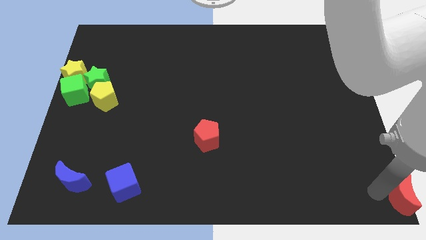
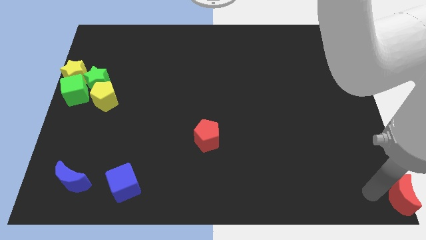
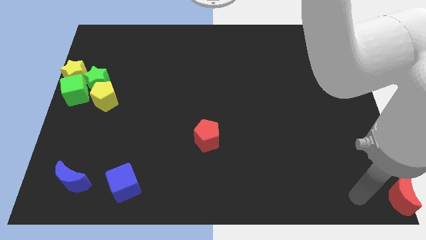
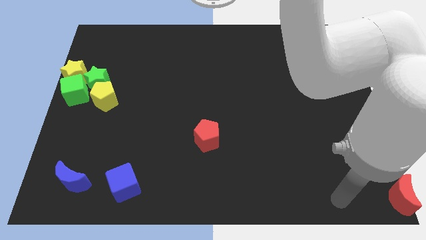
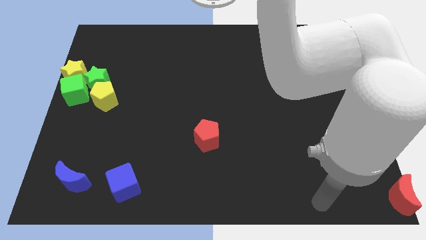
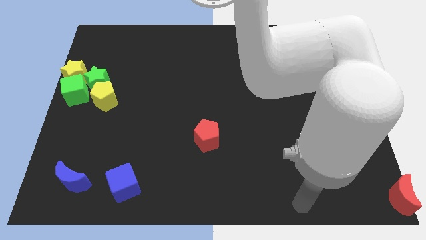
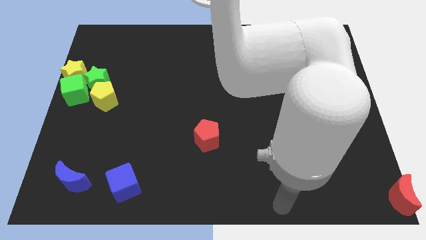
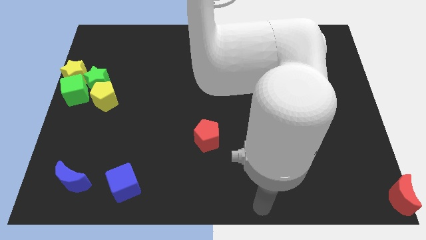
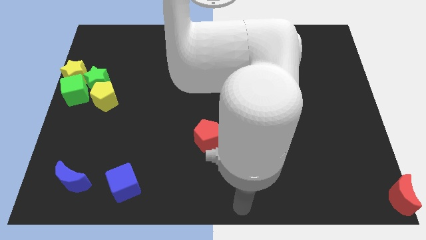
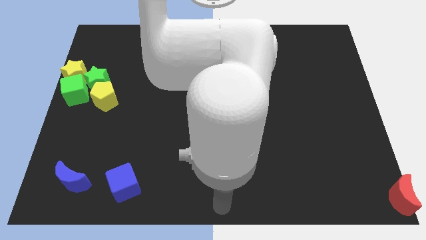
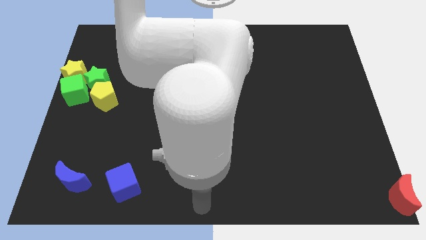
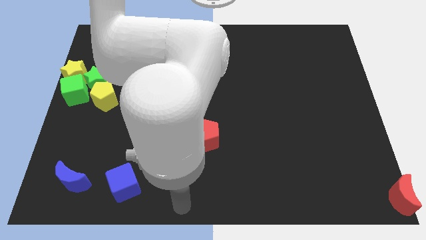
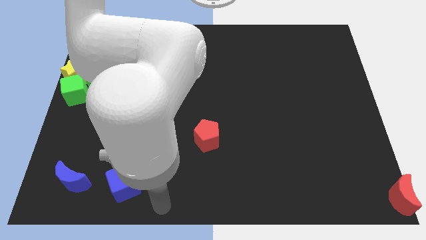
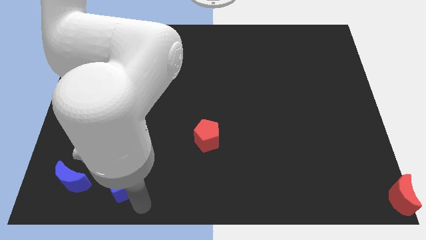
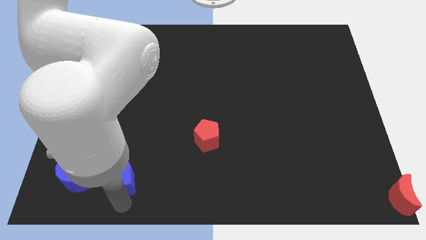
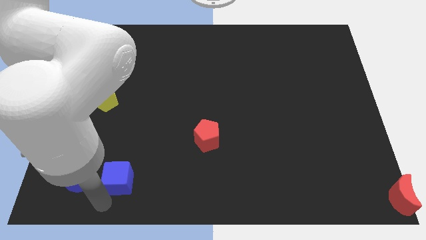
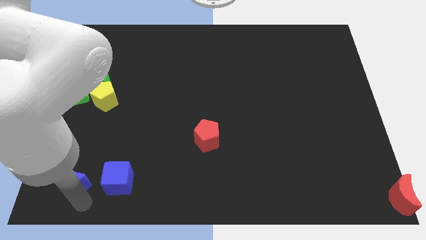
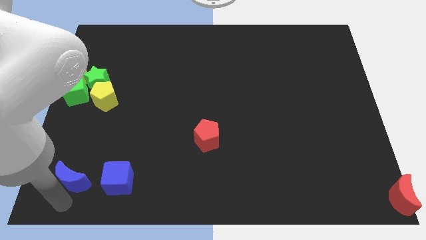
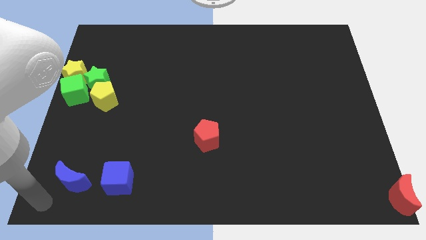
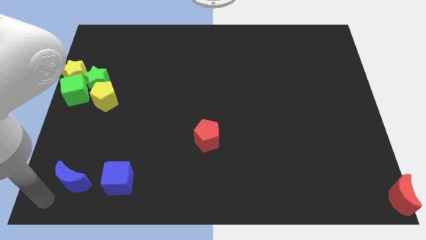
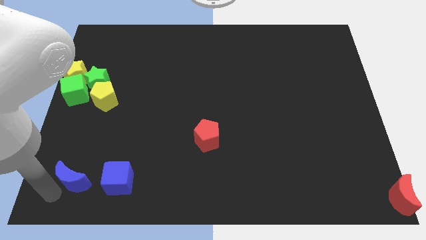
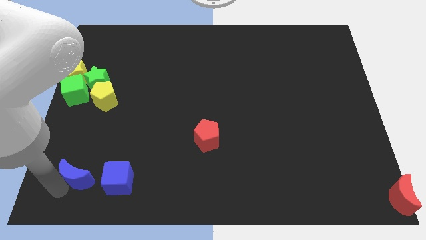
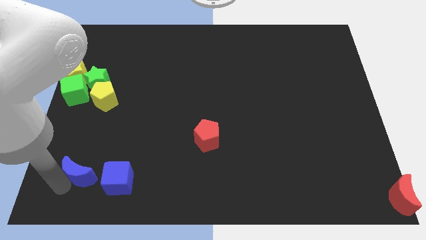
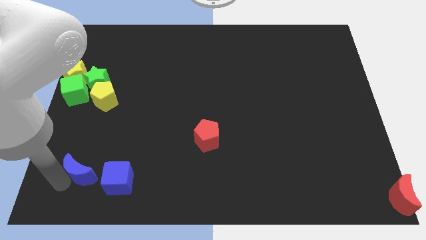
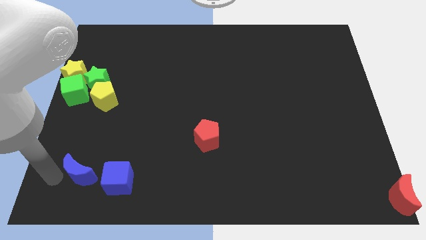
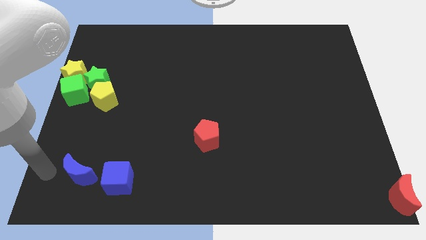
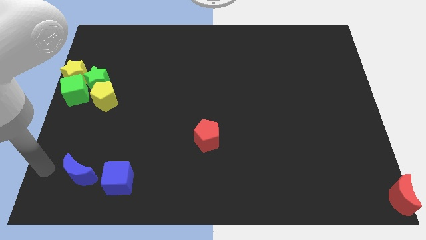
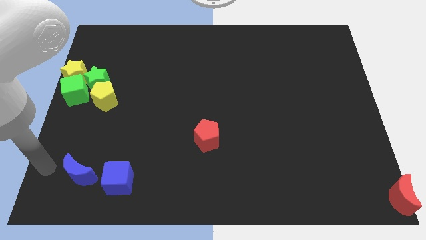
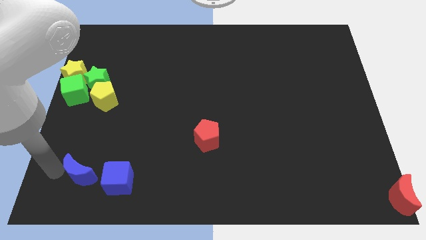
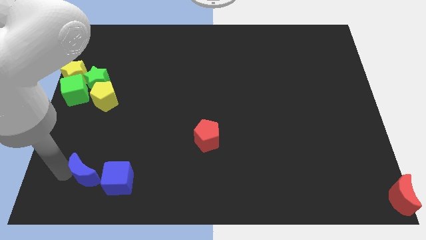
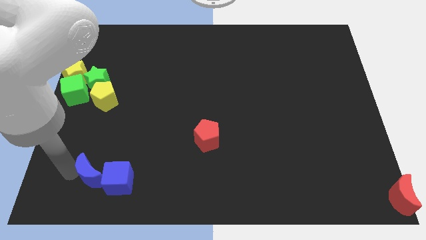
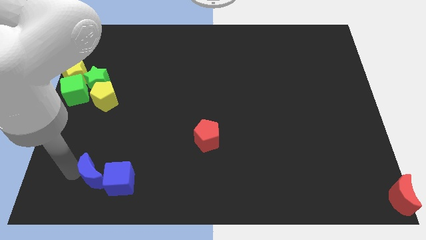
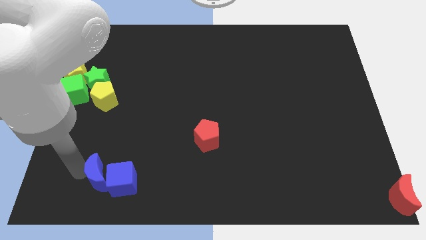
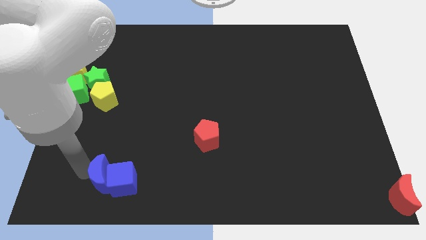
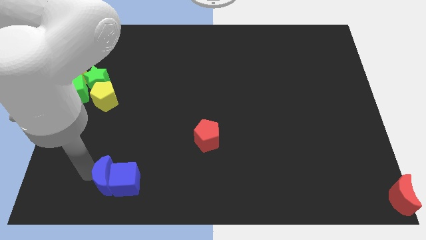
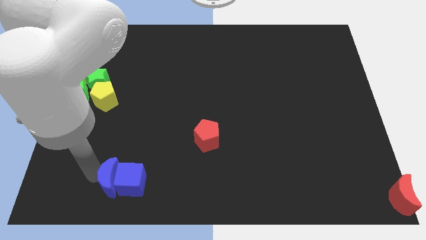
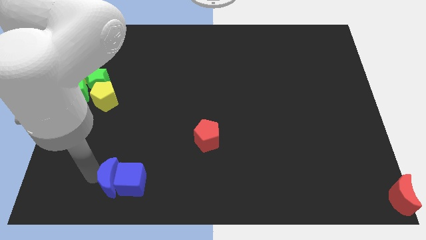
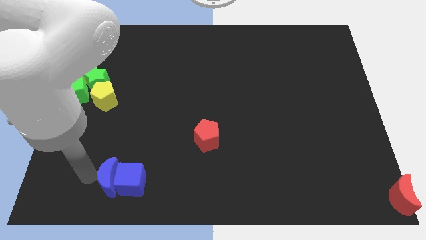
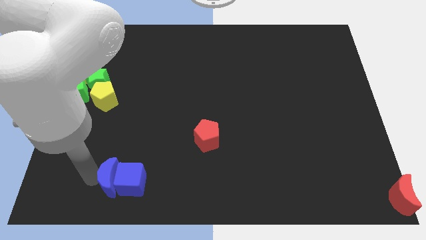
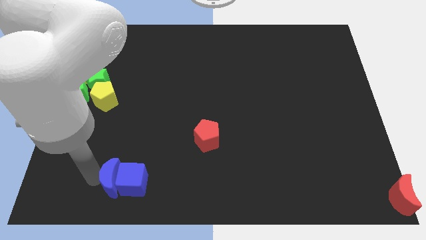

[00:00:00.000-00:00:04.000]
push the blue crescent into blue cube

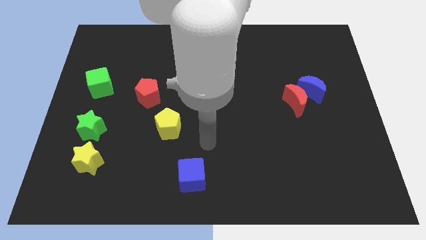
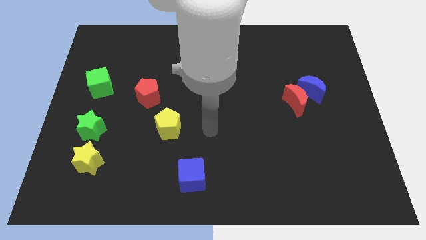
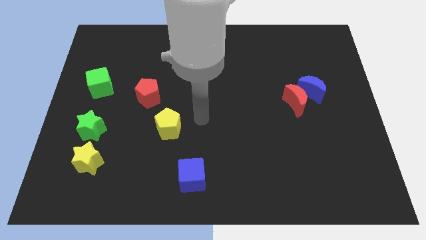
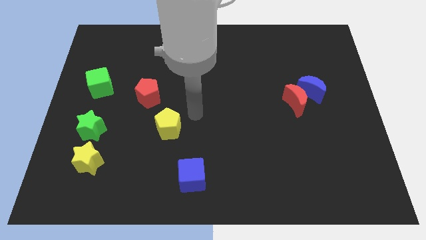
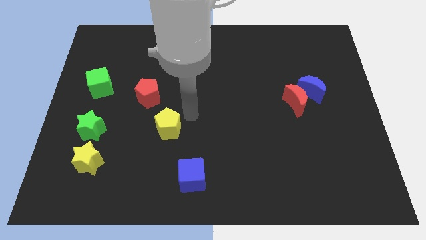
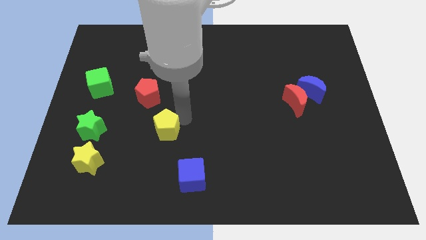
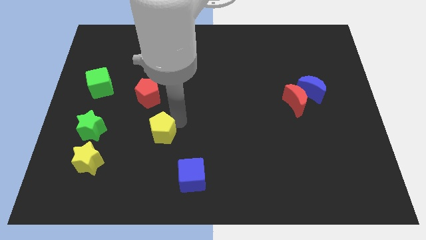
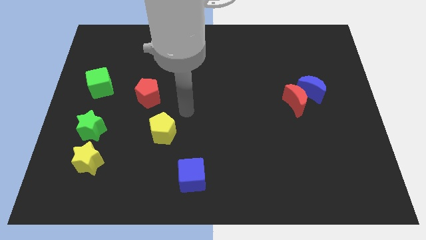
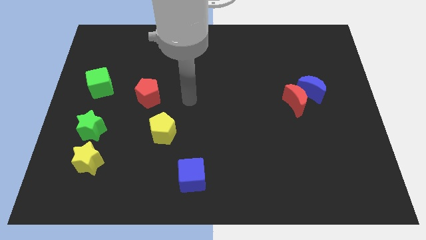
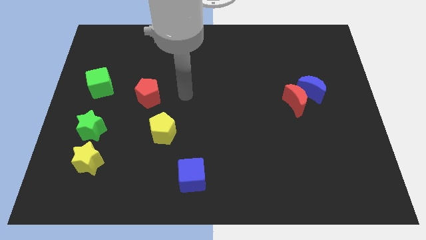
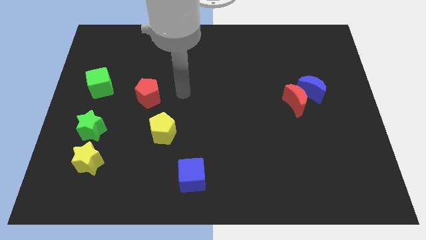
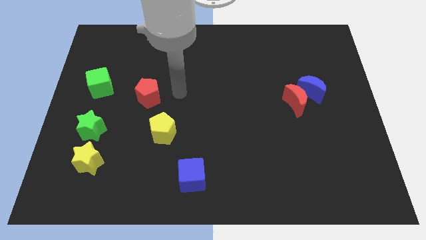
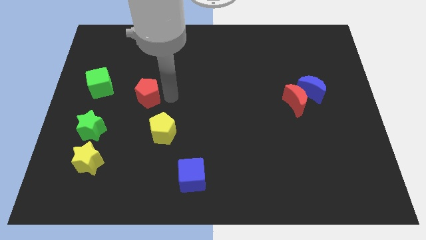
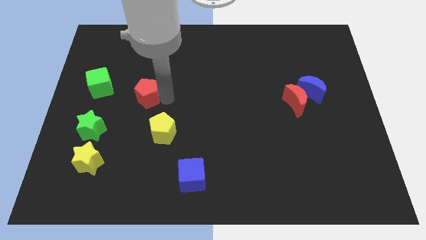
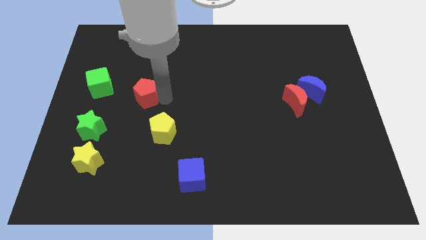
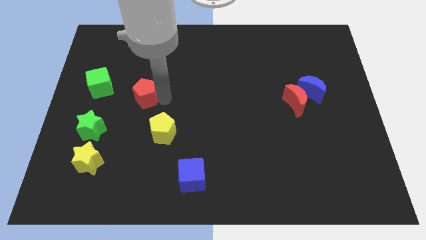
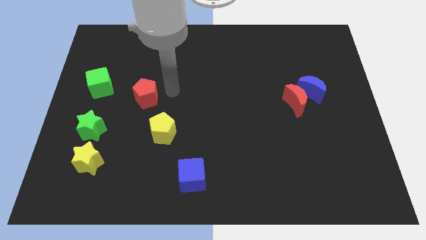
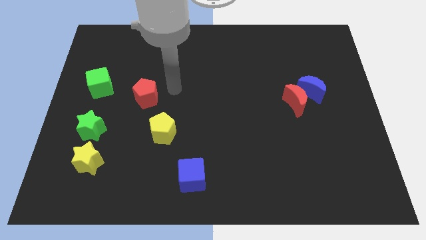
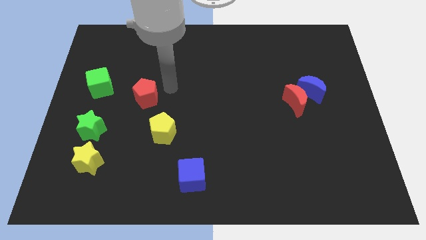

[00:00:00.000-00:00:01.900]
touch the yellow pentagon and red pentagon manually

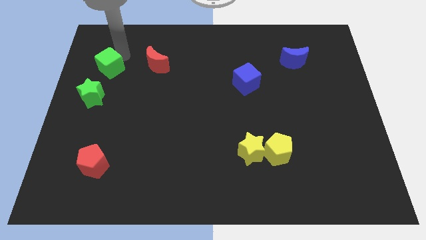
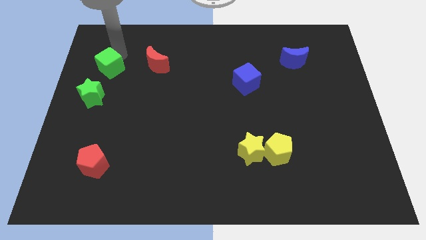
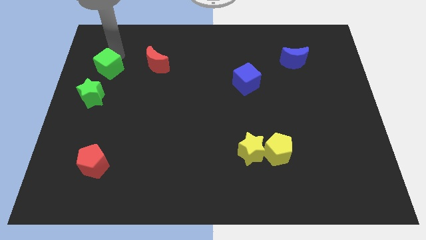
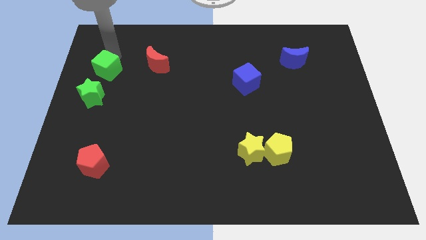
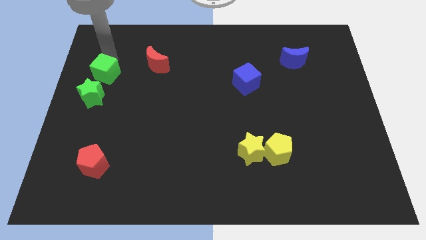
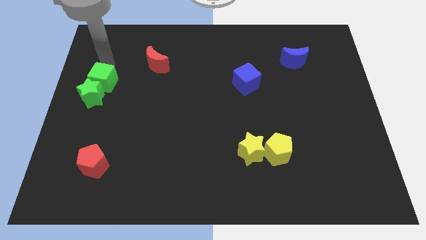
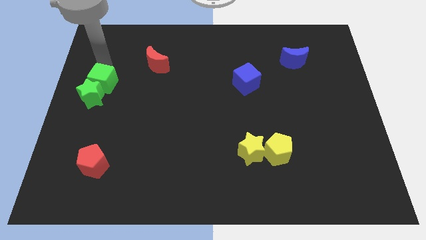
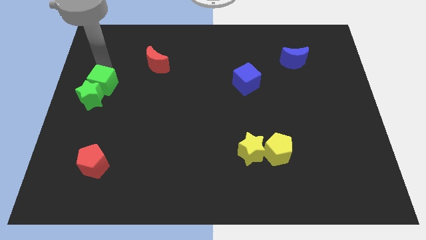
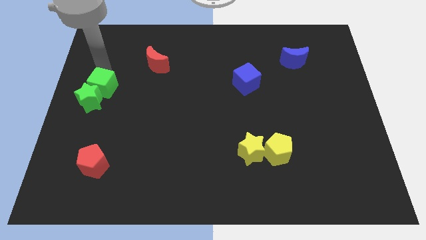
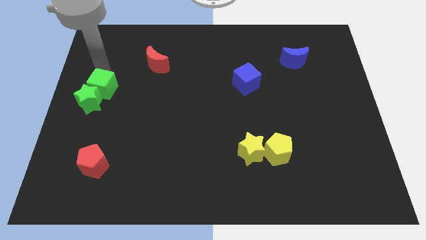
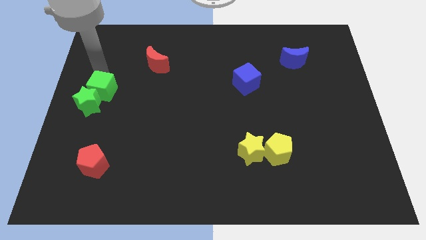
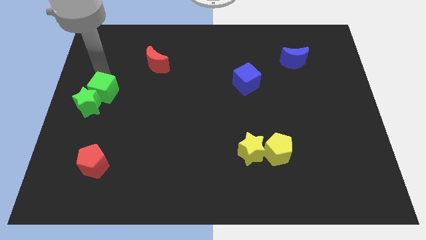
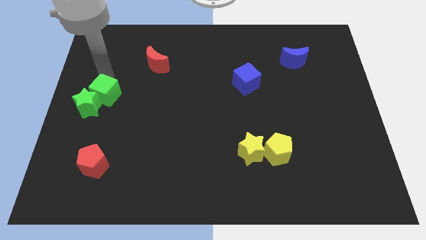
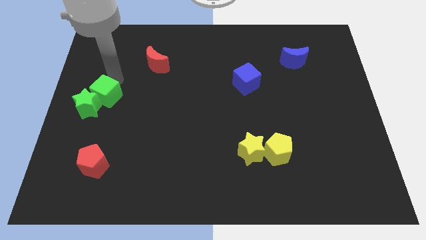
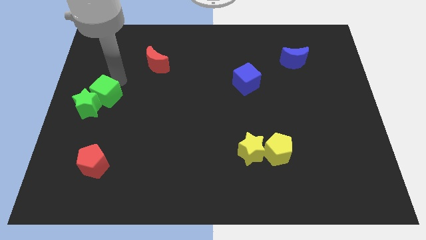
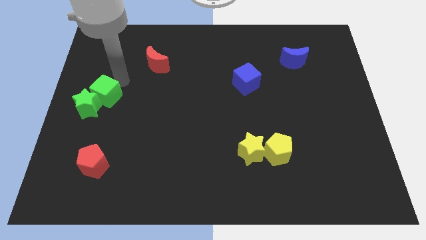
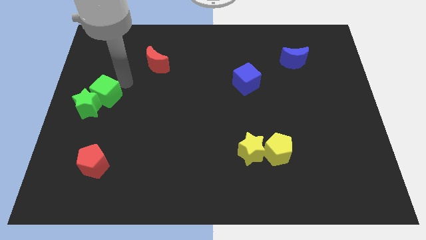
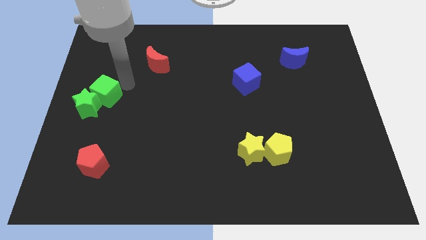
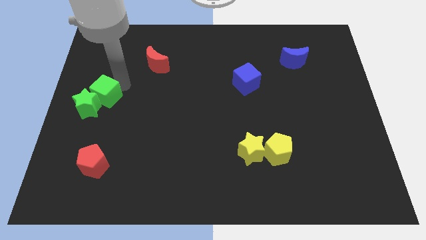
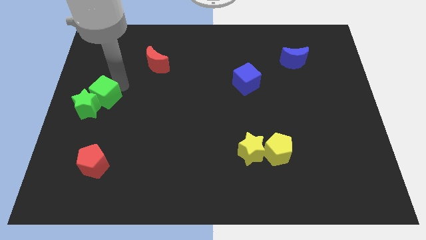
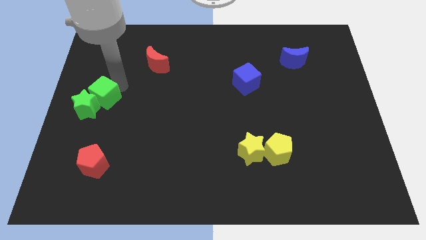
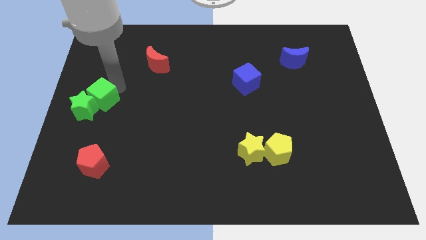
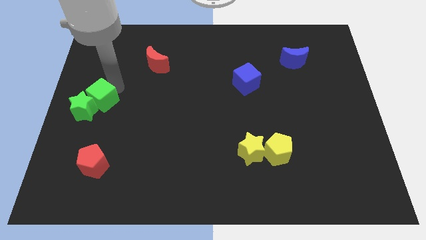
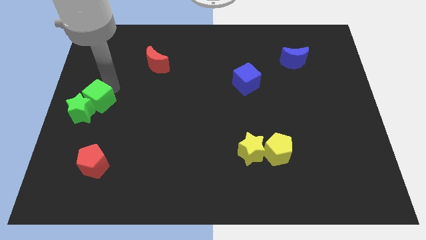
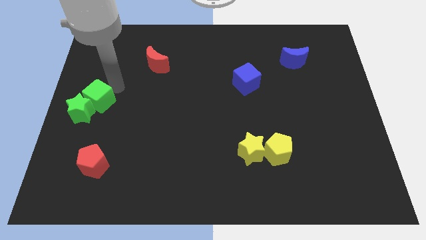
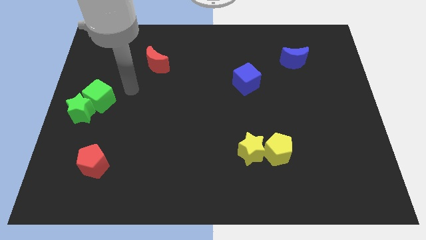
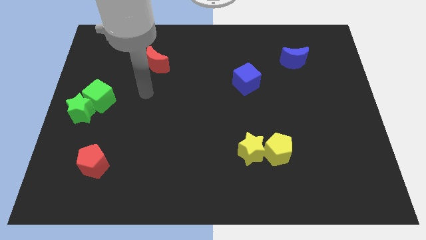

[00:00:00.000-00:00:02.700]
move the green cube into the green star

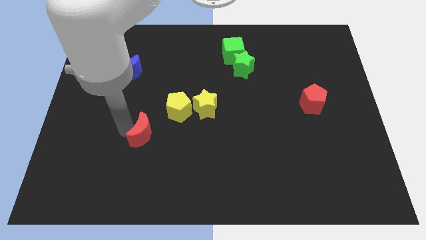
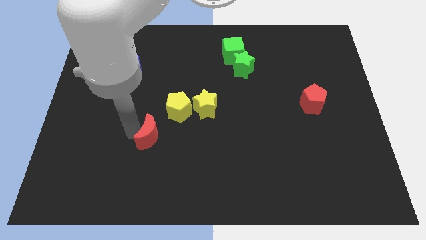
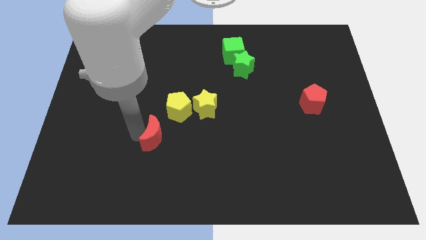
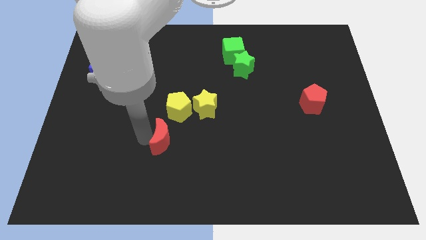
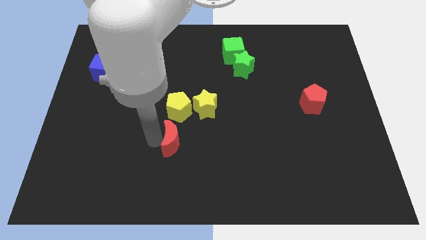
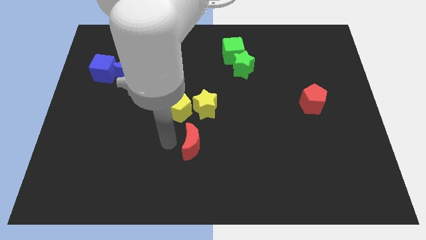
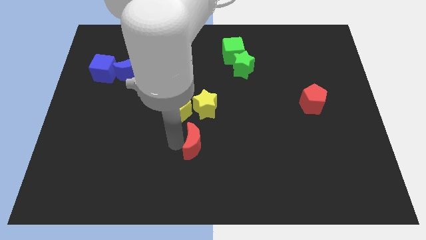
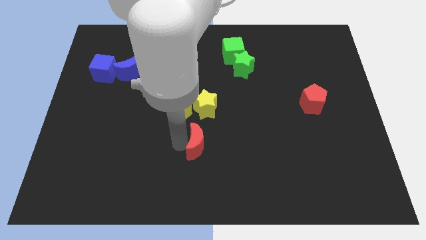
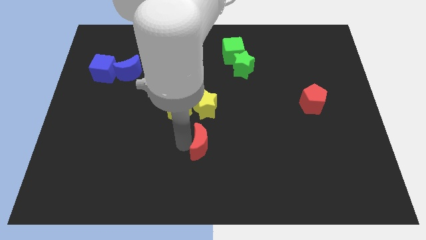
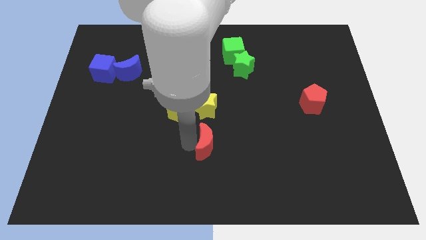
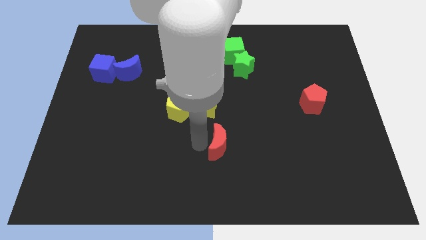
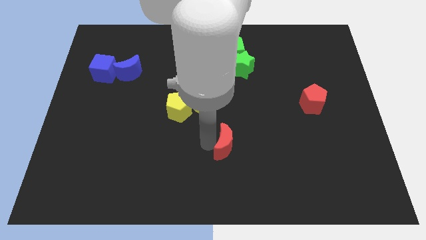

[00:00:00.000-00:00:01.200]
push the red crescent towards the right side of the board
